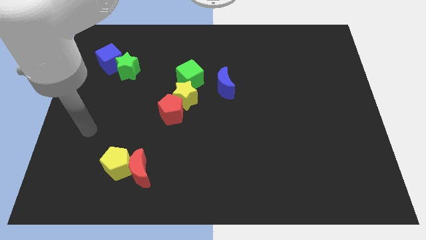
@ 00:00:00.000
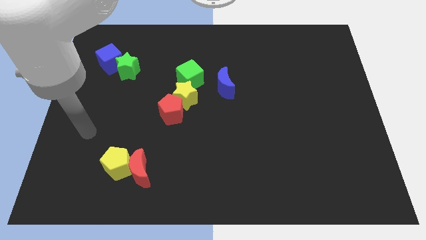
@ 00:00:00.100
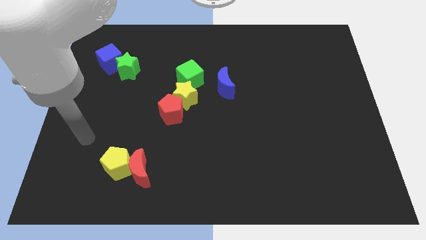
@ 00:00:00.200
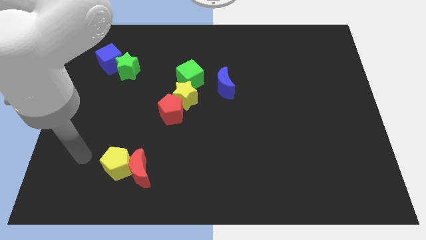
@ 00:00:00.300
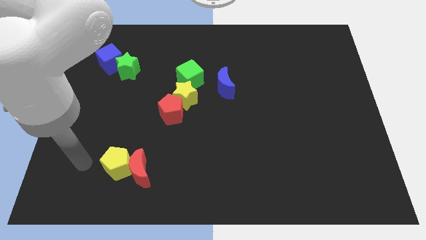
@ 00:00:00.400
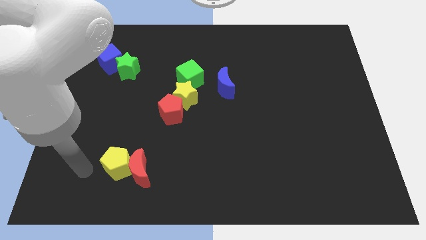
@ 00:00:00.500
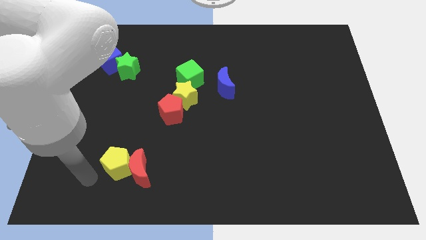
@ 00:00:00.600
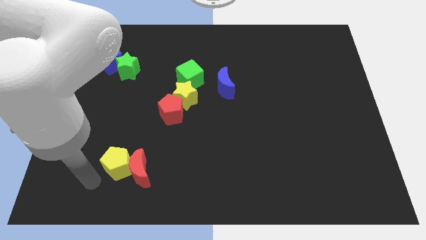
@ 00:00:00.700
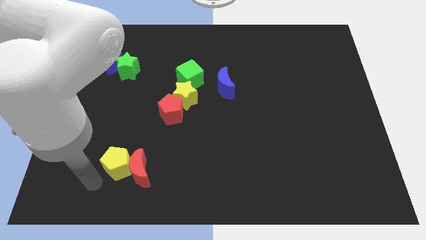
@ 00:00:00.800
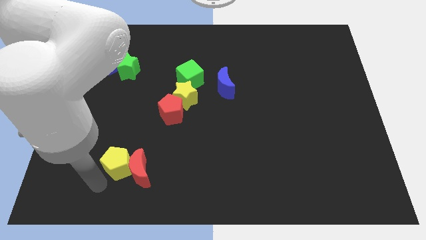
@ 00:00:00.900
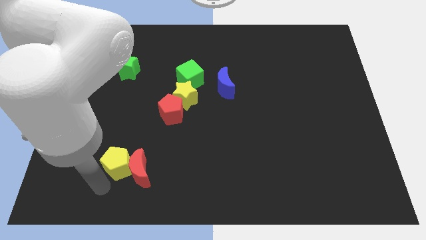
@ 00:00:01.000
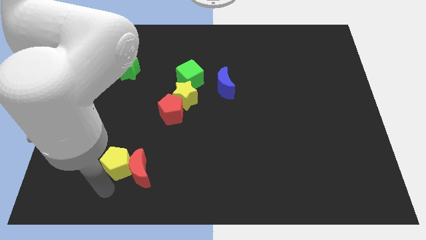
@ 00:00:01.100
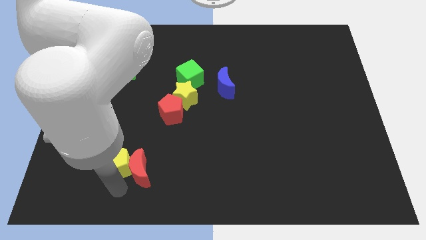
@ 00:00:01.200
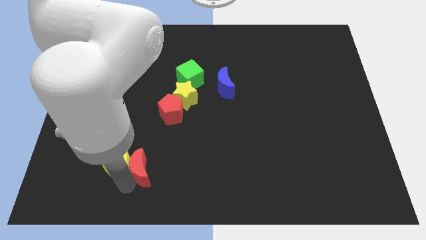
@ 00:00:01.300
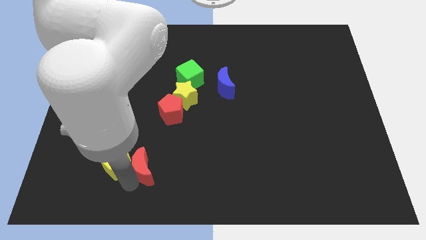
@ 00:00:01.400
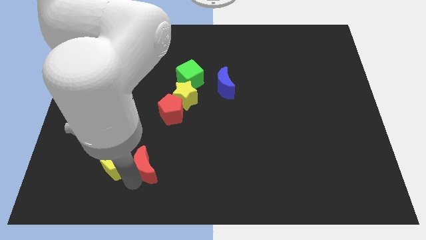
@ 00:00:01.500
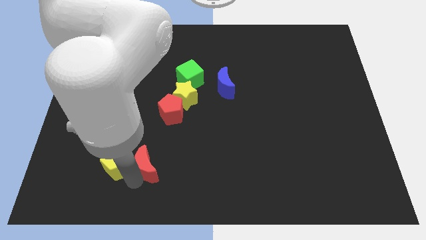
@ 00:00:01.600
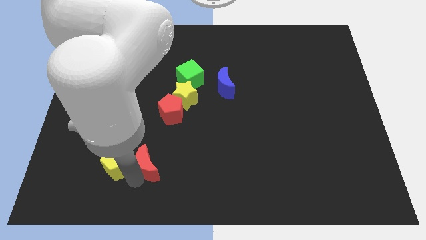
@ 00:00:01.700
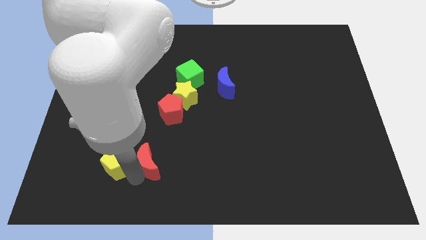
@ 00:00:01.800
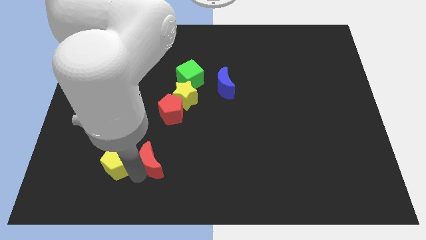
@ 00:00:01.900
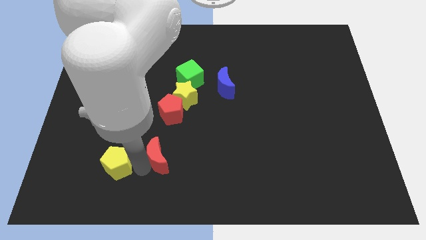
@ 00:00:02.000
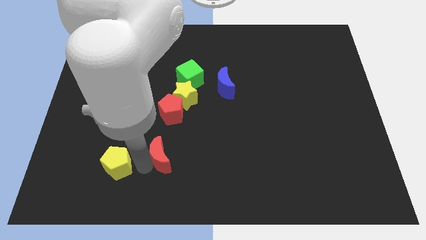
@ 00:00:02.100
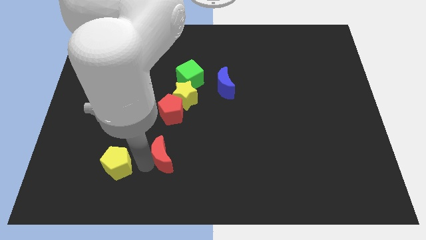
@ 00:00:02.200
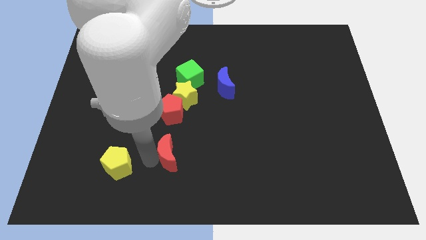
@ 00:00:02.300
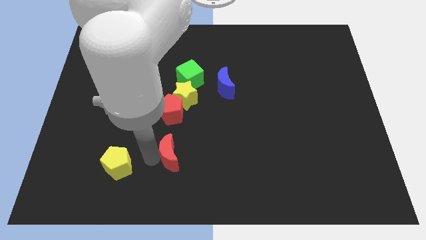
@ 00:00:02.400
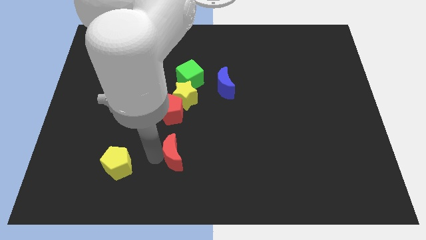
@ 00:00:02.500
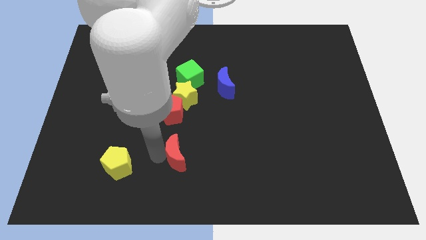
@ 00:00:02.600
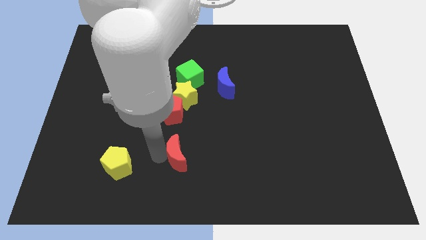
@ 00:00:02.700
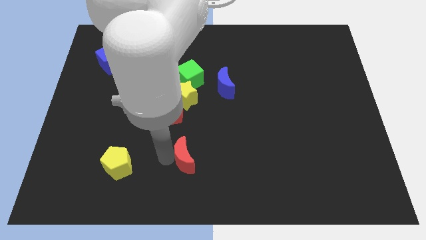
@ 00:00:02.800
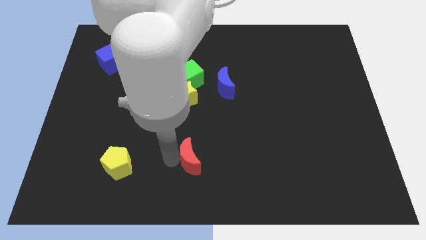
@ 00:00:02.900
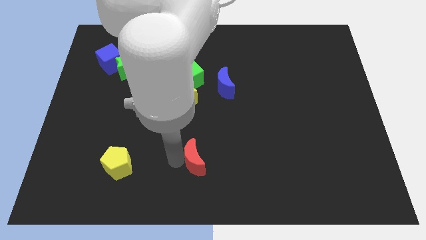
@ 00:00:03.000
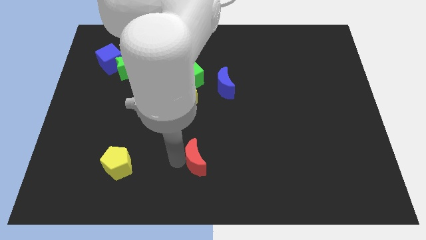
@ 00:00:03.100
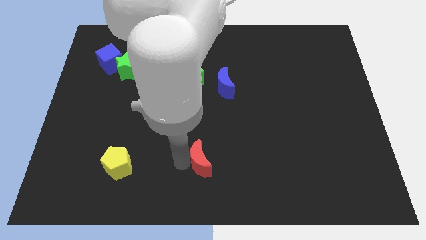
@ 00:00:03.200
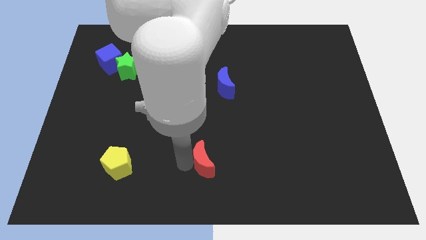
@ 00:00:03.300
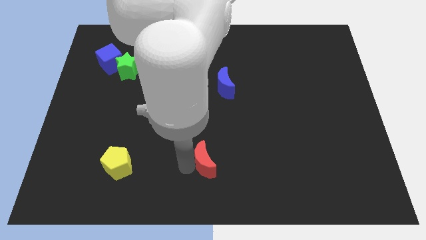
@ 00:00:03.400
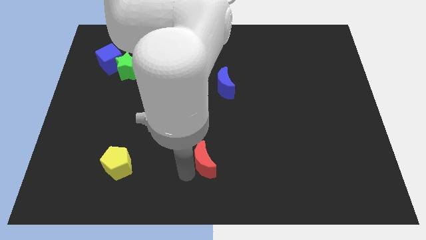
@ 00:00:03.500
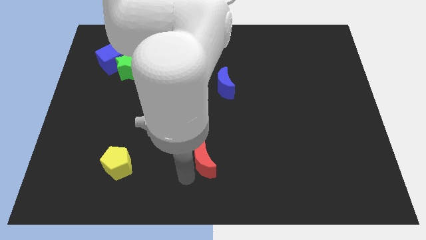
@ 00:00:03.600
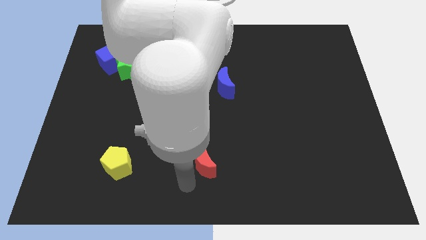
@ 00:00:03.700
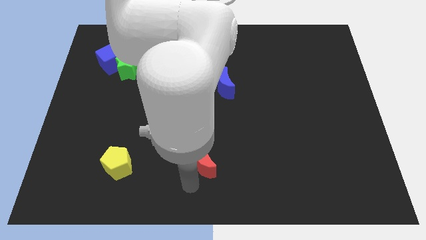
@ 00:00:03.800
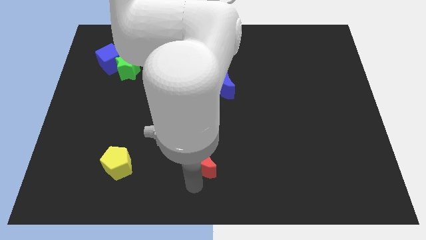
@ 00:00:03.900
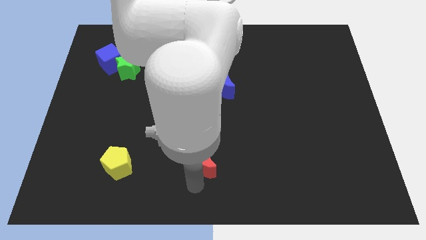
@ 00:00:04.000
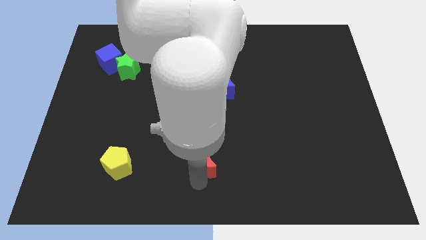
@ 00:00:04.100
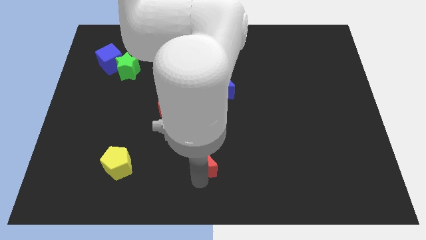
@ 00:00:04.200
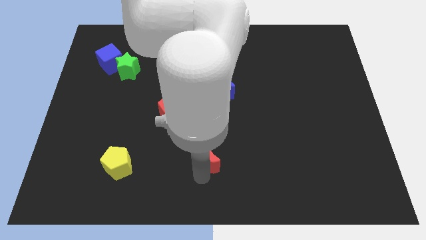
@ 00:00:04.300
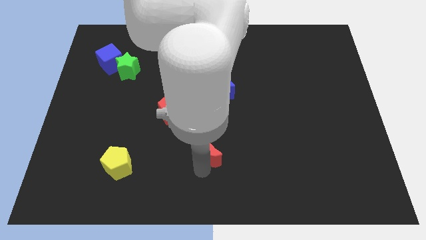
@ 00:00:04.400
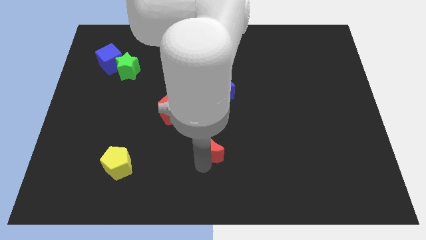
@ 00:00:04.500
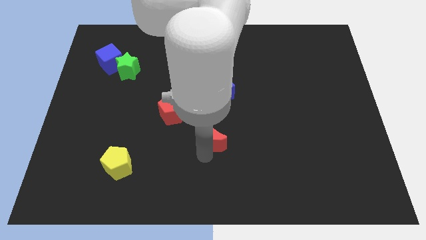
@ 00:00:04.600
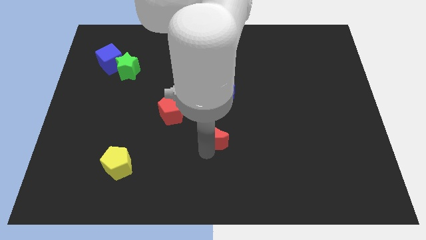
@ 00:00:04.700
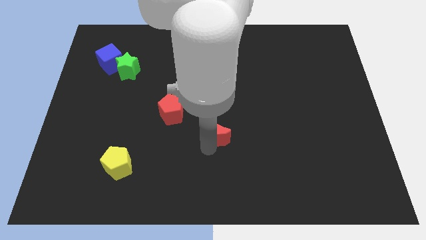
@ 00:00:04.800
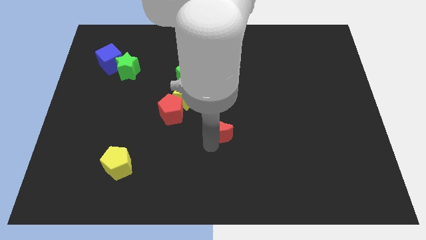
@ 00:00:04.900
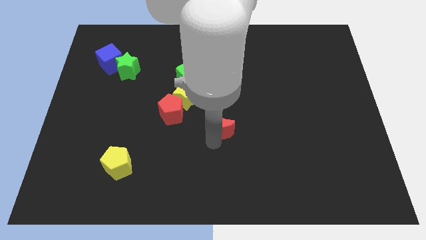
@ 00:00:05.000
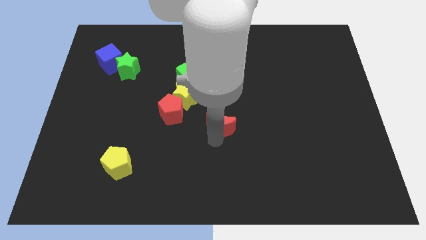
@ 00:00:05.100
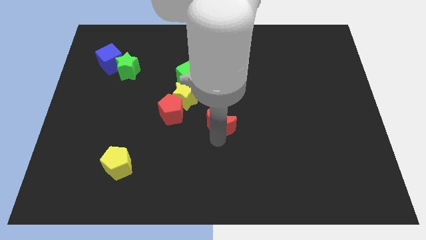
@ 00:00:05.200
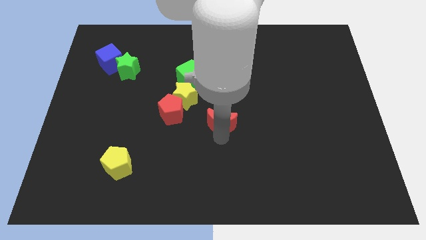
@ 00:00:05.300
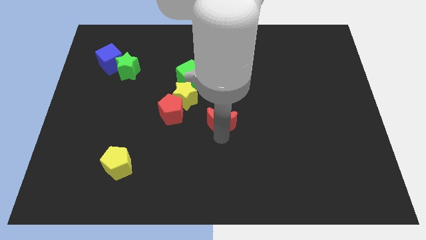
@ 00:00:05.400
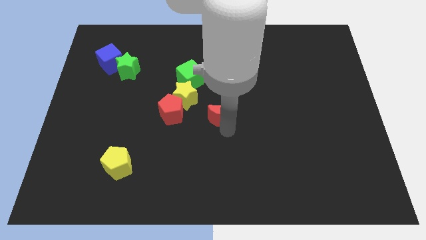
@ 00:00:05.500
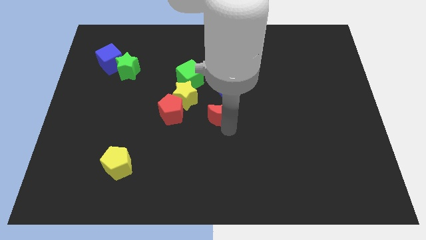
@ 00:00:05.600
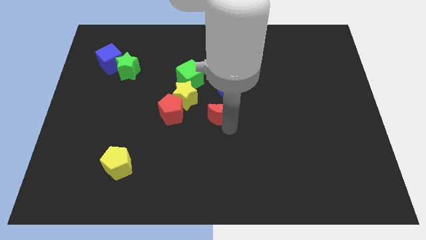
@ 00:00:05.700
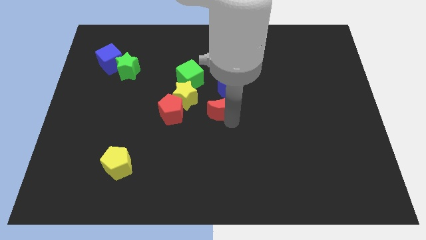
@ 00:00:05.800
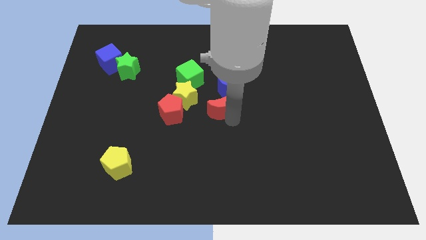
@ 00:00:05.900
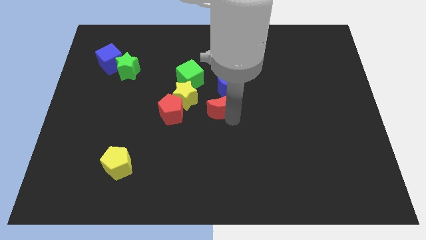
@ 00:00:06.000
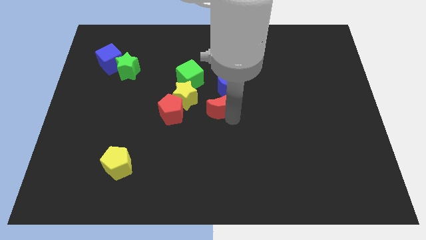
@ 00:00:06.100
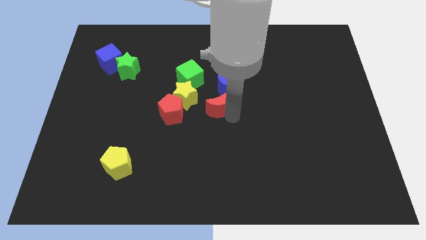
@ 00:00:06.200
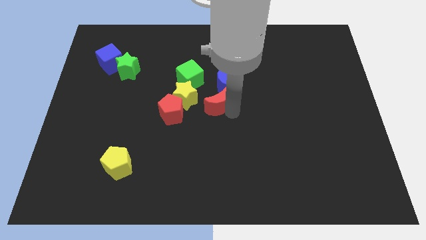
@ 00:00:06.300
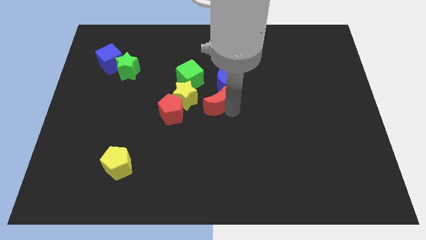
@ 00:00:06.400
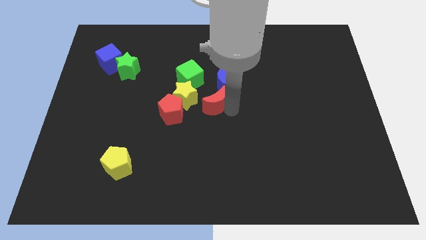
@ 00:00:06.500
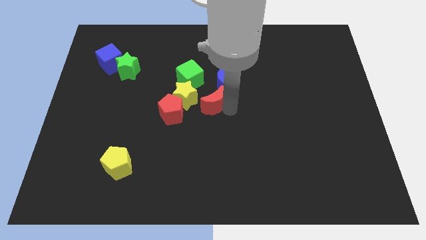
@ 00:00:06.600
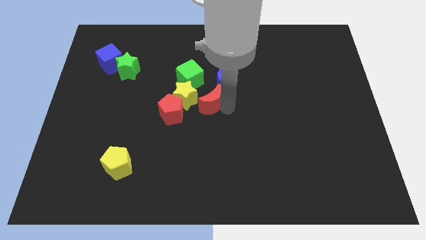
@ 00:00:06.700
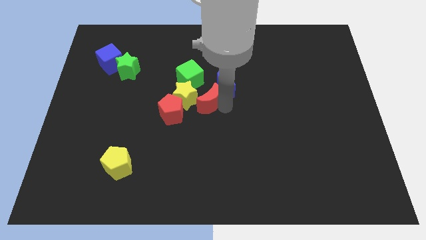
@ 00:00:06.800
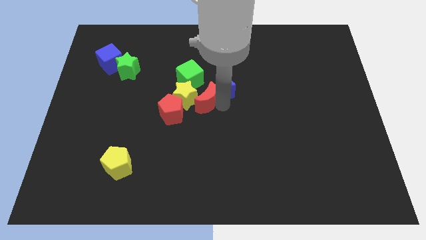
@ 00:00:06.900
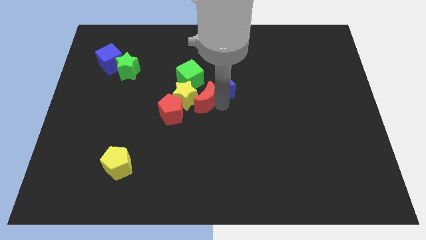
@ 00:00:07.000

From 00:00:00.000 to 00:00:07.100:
slide the red moon to the yellow star

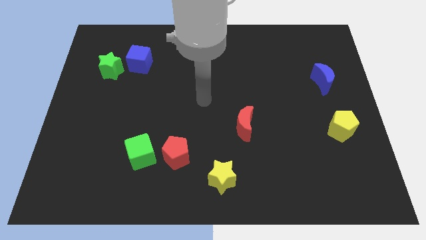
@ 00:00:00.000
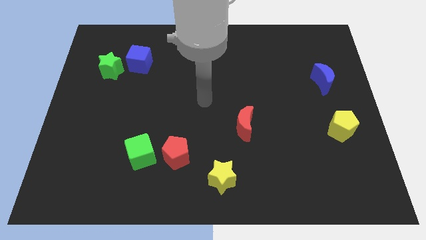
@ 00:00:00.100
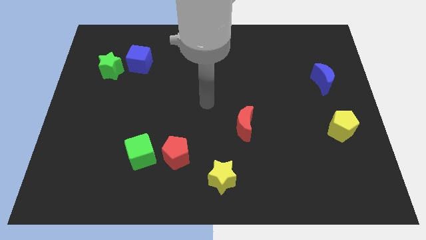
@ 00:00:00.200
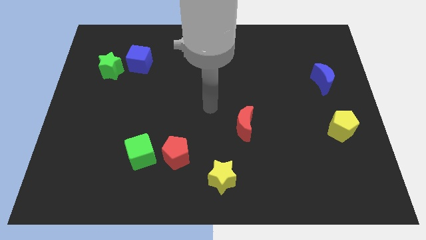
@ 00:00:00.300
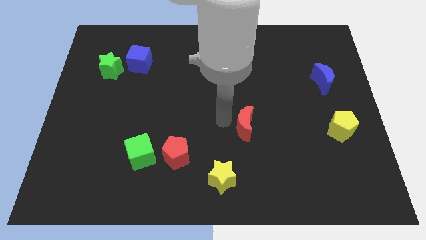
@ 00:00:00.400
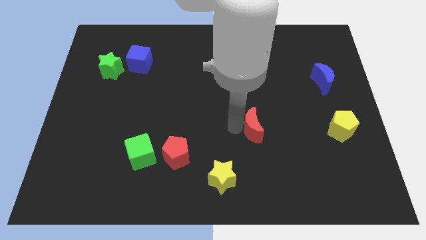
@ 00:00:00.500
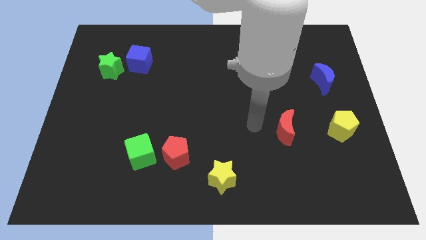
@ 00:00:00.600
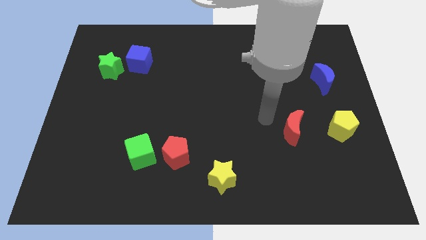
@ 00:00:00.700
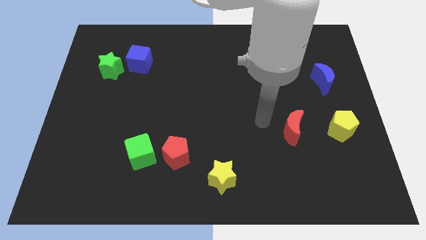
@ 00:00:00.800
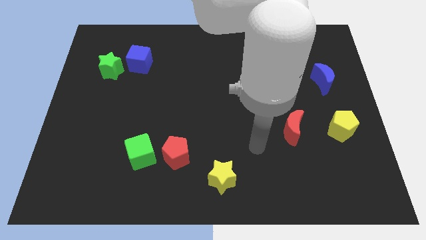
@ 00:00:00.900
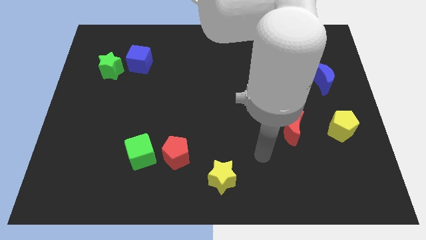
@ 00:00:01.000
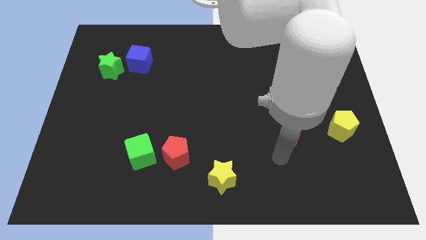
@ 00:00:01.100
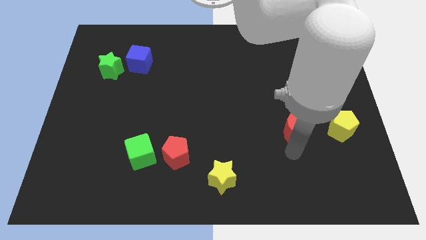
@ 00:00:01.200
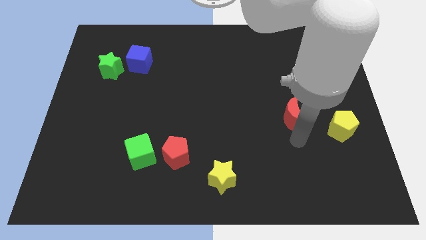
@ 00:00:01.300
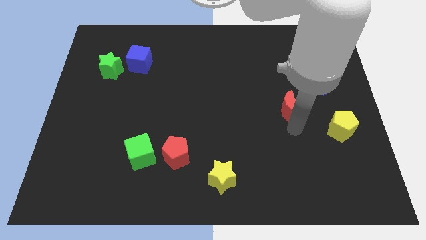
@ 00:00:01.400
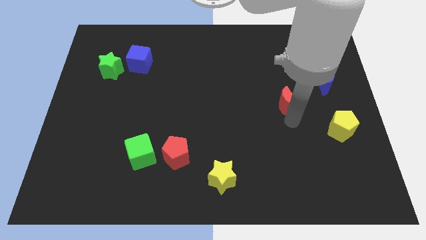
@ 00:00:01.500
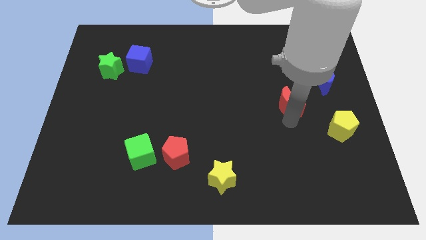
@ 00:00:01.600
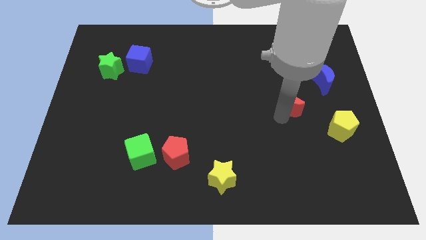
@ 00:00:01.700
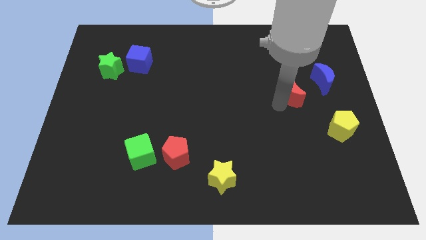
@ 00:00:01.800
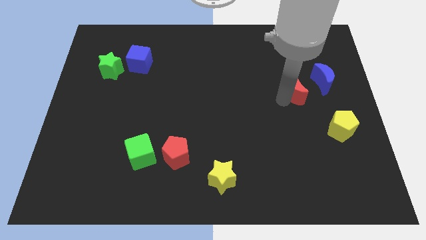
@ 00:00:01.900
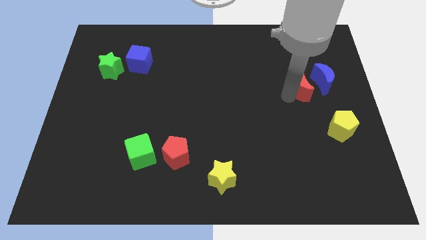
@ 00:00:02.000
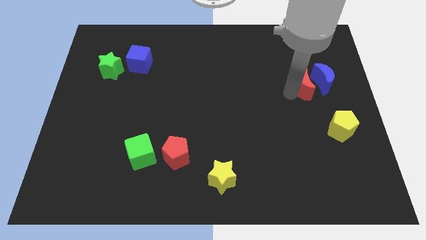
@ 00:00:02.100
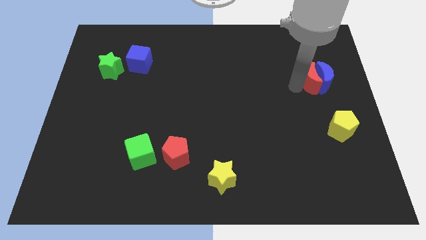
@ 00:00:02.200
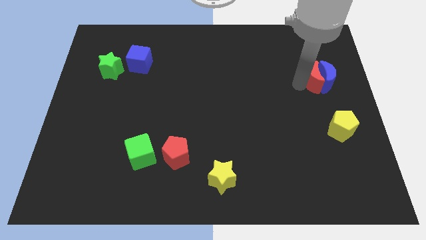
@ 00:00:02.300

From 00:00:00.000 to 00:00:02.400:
slide the red moon to the blue moon
